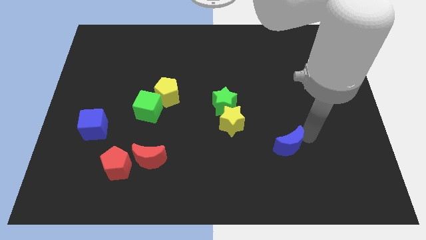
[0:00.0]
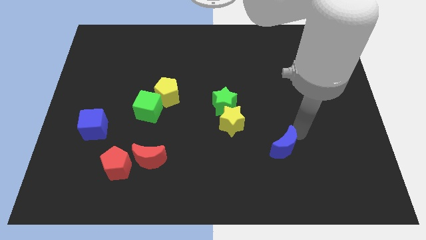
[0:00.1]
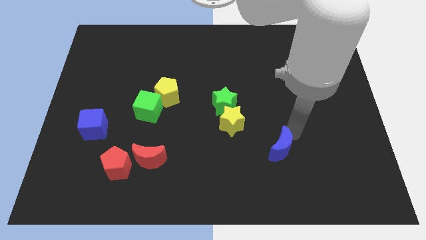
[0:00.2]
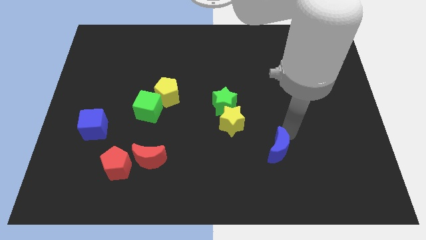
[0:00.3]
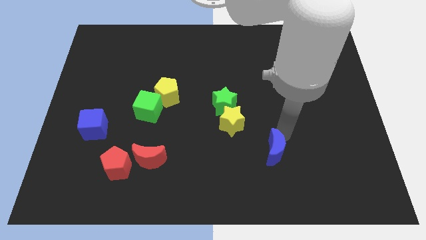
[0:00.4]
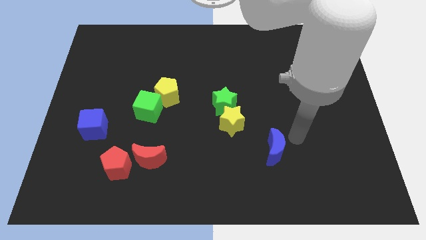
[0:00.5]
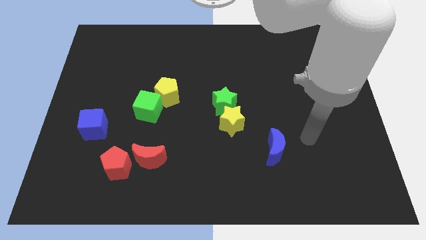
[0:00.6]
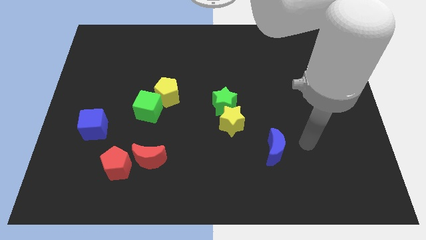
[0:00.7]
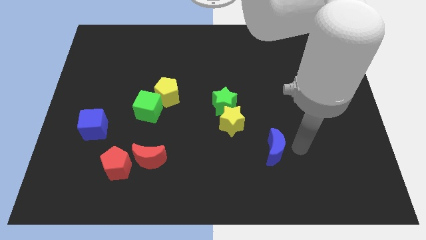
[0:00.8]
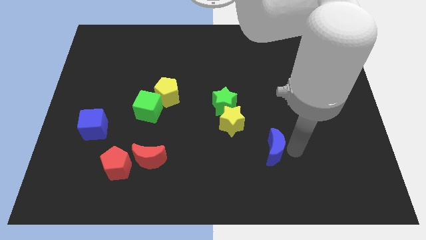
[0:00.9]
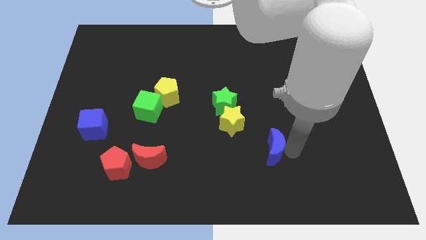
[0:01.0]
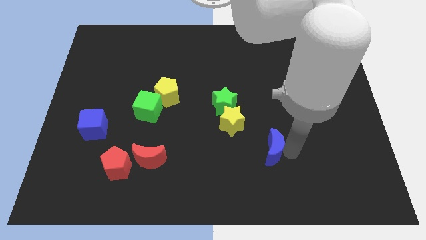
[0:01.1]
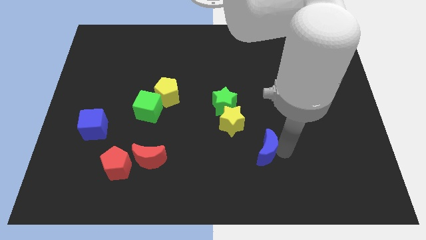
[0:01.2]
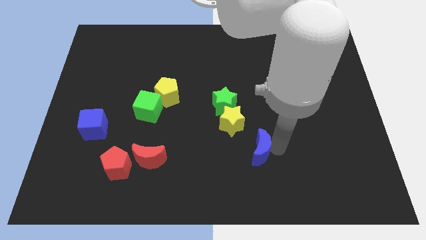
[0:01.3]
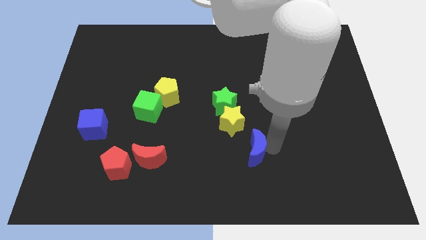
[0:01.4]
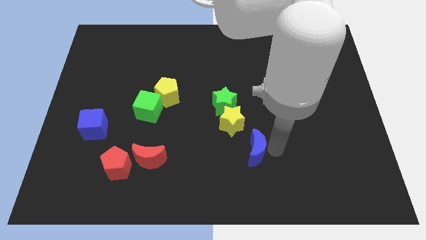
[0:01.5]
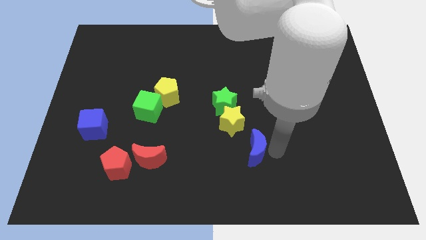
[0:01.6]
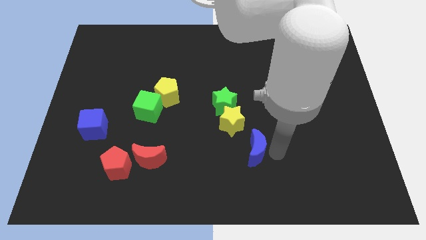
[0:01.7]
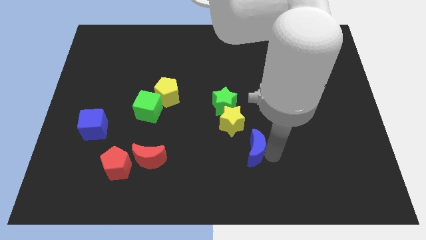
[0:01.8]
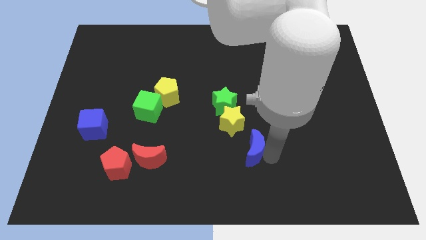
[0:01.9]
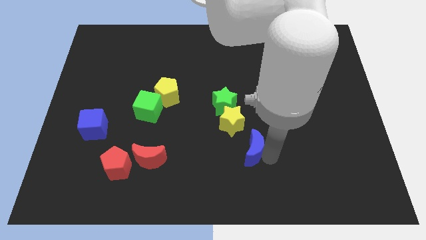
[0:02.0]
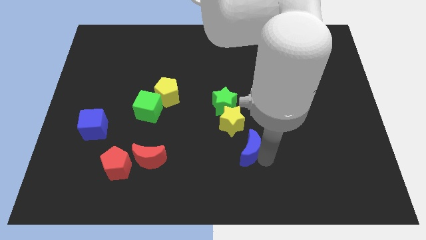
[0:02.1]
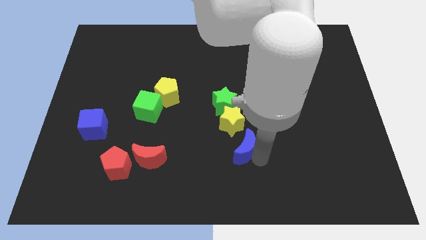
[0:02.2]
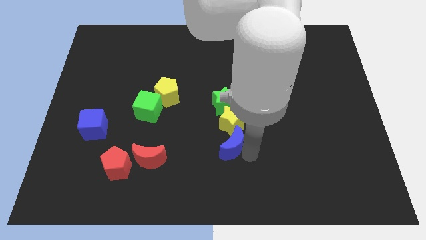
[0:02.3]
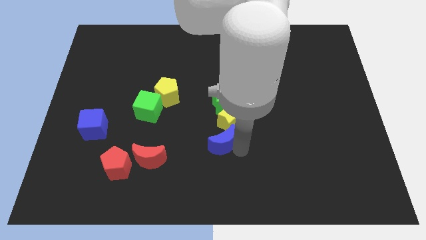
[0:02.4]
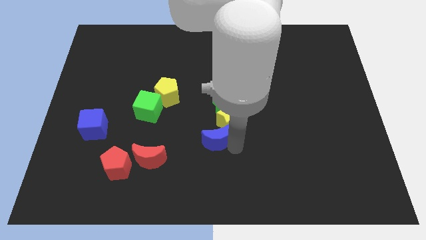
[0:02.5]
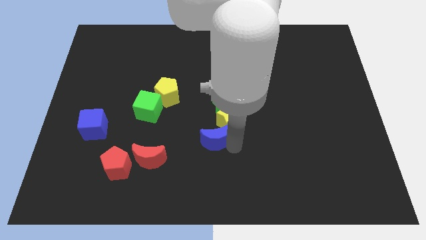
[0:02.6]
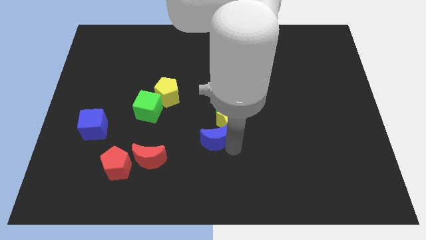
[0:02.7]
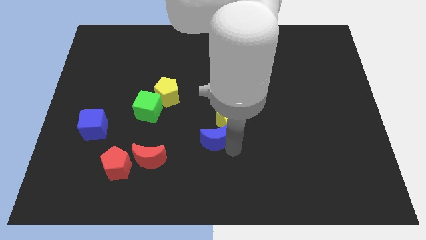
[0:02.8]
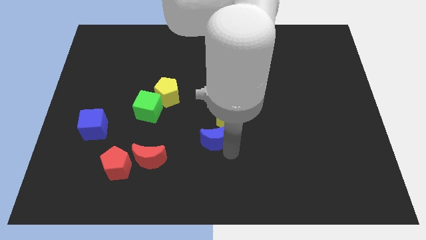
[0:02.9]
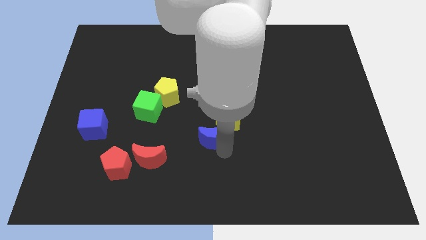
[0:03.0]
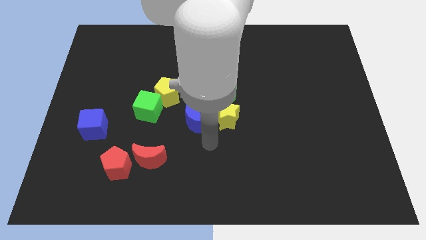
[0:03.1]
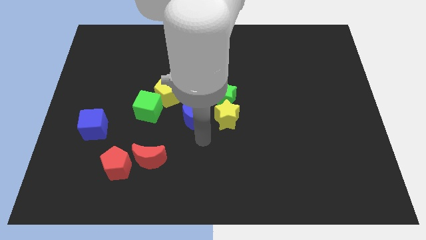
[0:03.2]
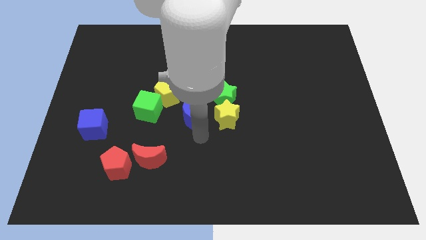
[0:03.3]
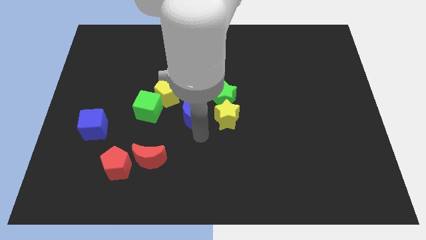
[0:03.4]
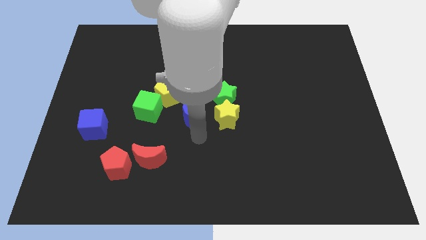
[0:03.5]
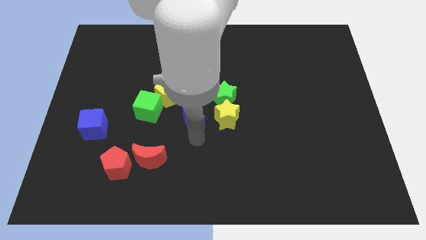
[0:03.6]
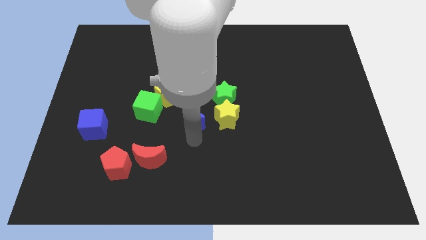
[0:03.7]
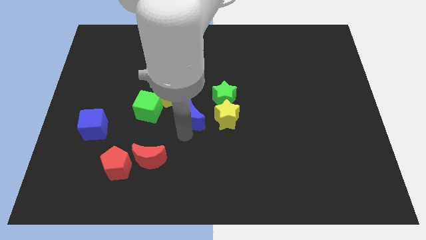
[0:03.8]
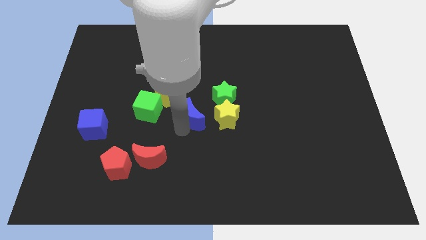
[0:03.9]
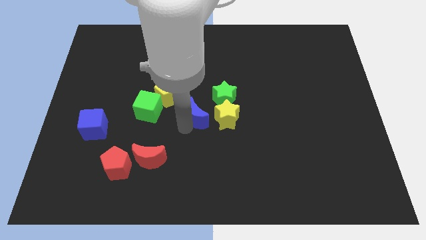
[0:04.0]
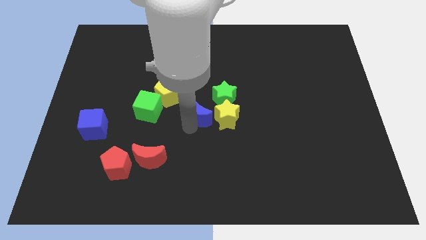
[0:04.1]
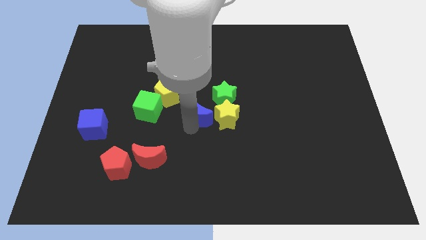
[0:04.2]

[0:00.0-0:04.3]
place the blue moon to the left side of the yellow pentagon

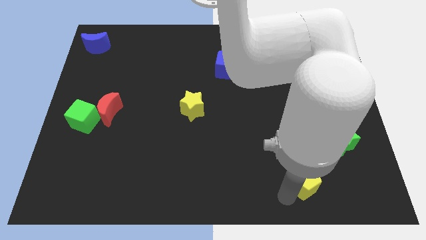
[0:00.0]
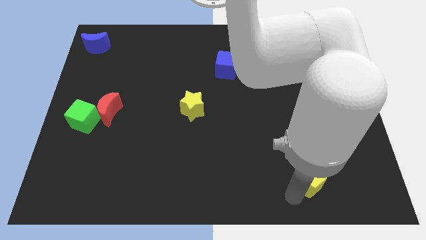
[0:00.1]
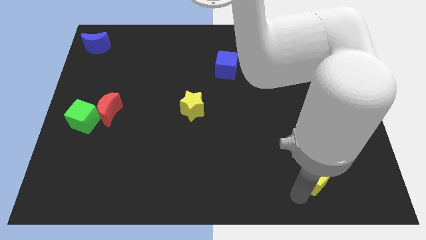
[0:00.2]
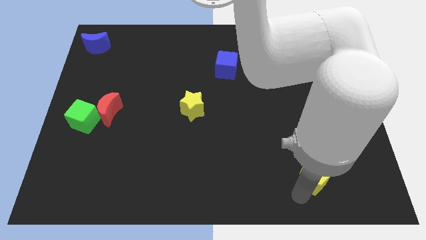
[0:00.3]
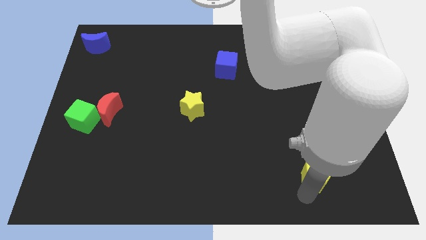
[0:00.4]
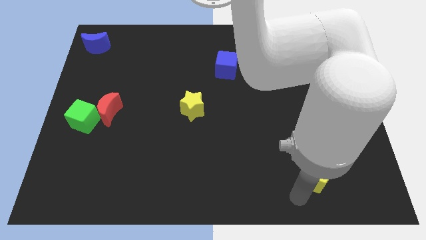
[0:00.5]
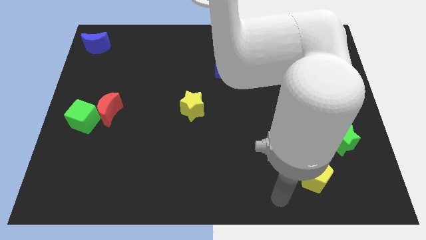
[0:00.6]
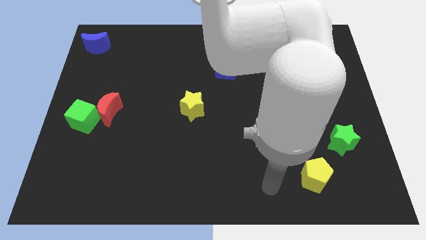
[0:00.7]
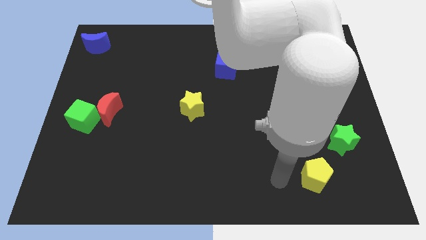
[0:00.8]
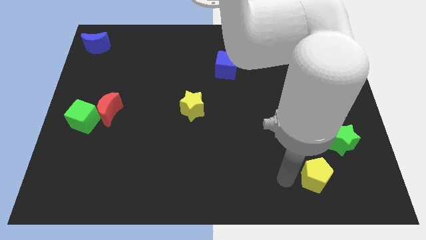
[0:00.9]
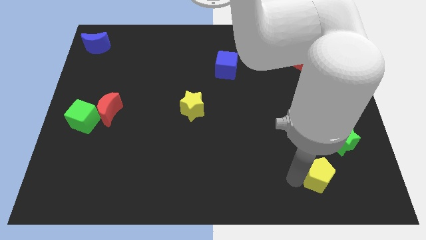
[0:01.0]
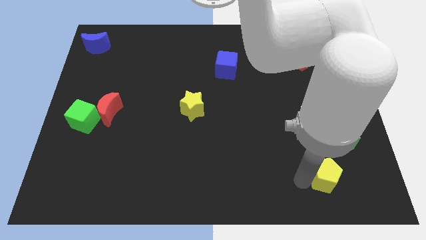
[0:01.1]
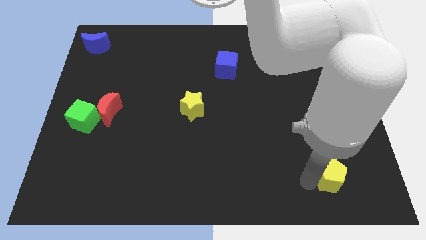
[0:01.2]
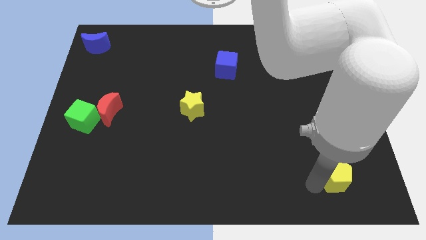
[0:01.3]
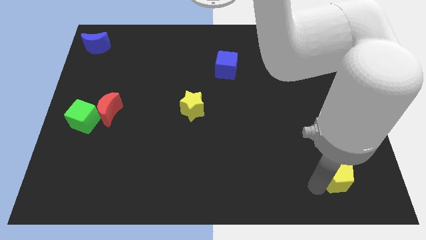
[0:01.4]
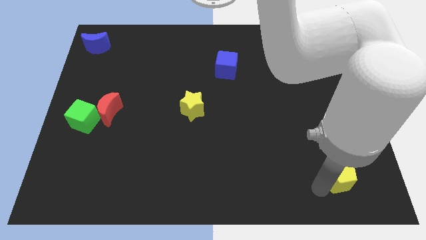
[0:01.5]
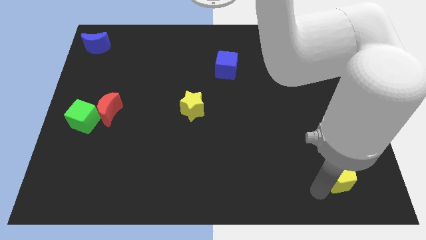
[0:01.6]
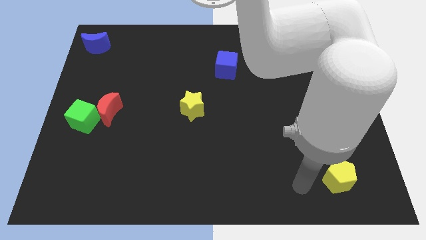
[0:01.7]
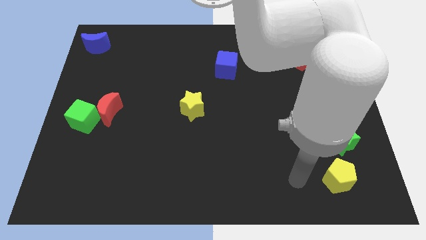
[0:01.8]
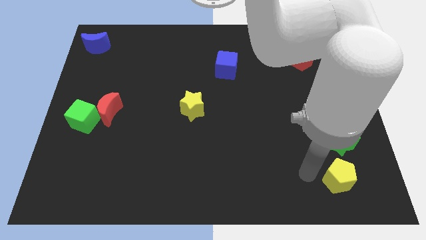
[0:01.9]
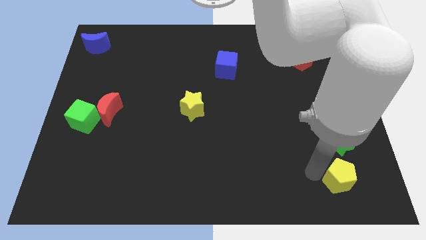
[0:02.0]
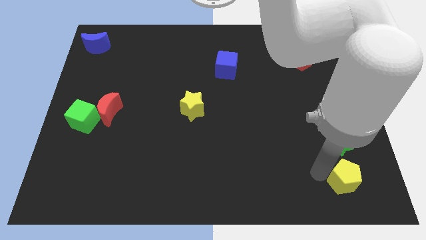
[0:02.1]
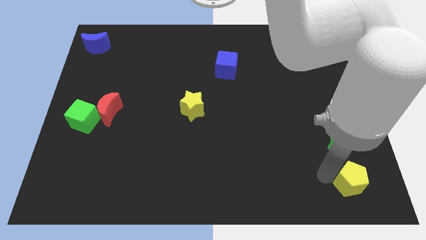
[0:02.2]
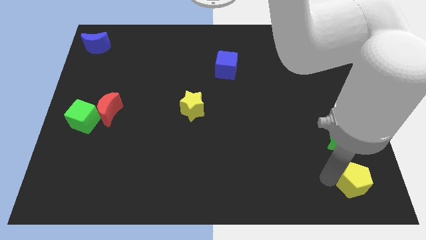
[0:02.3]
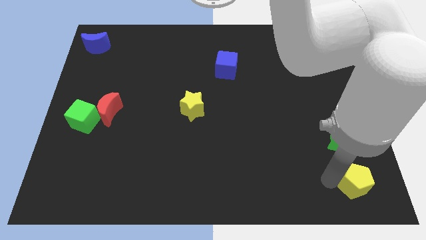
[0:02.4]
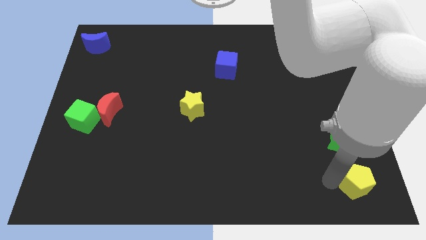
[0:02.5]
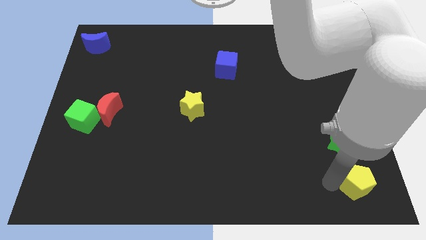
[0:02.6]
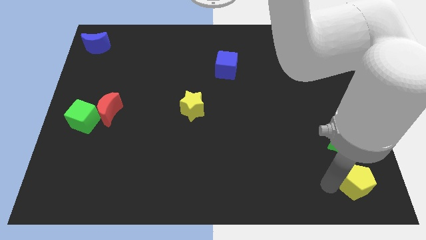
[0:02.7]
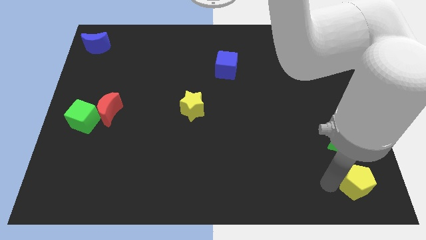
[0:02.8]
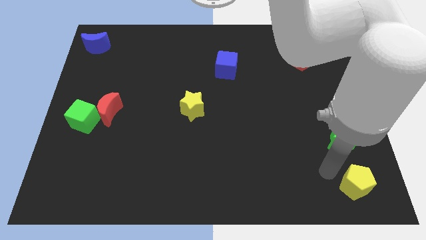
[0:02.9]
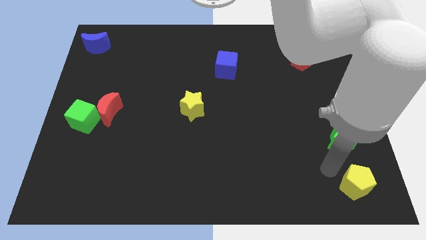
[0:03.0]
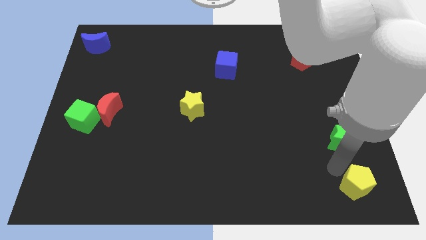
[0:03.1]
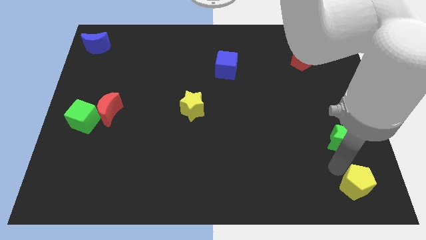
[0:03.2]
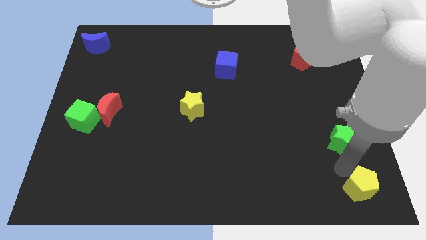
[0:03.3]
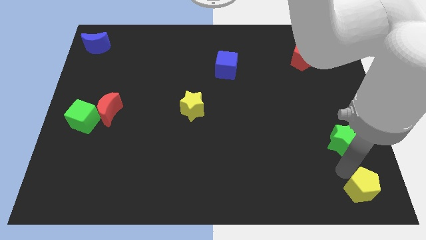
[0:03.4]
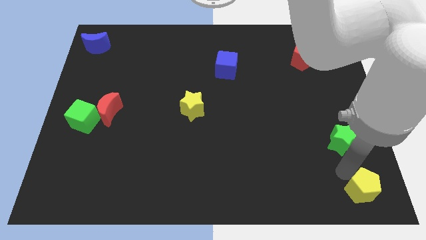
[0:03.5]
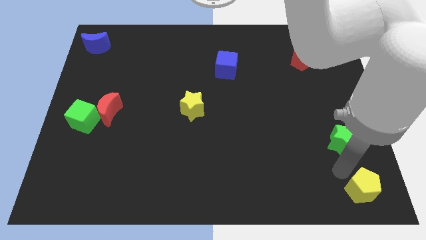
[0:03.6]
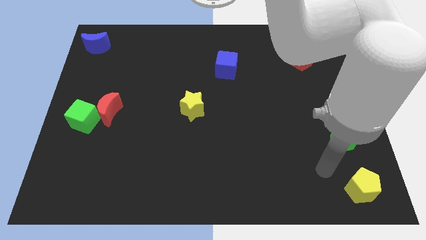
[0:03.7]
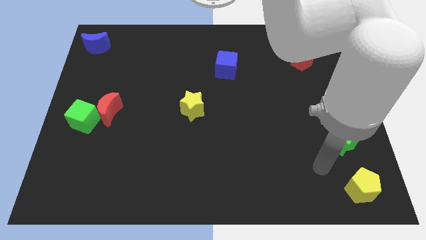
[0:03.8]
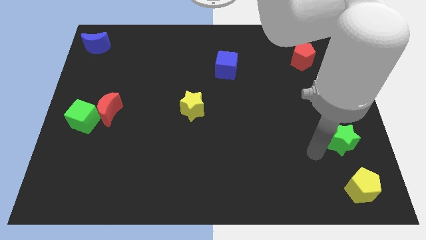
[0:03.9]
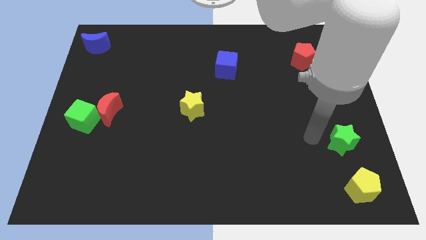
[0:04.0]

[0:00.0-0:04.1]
move yellow pentagon towards bottom right

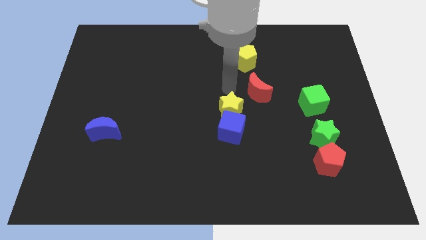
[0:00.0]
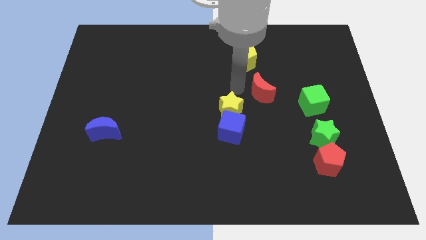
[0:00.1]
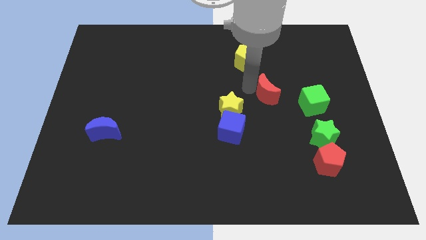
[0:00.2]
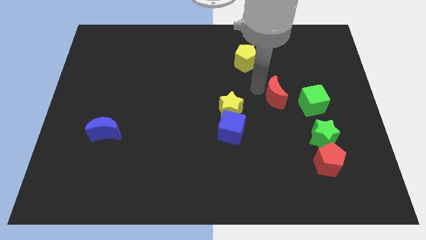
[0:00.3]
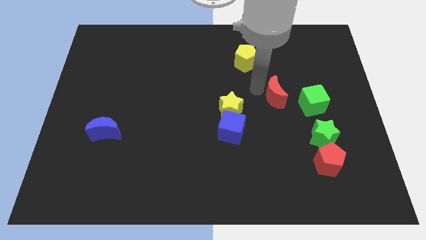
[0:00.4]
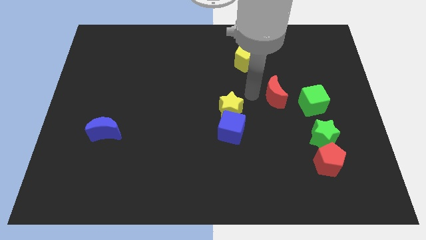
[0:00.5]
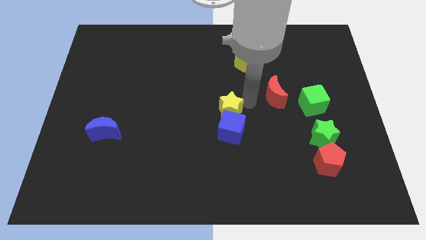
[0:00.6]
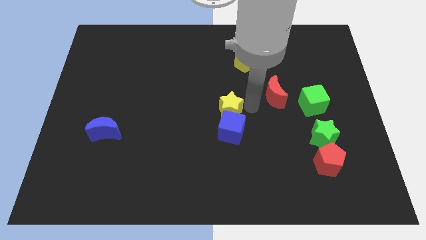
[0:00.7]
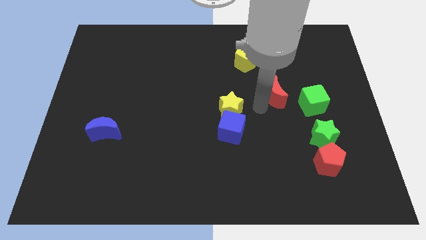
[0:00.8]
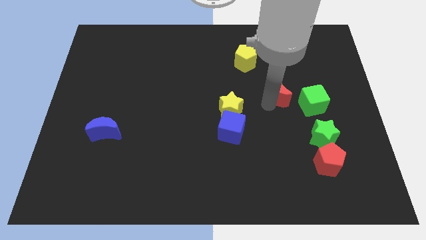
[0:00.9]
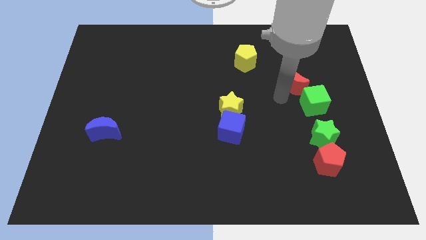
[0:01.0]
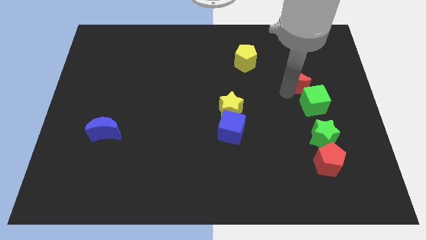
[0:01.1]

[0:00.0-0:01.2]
push the red crescent into green cube
